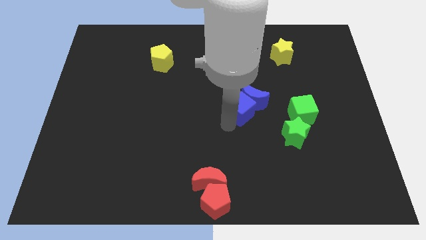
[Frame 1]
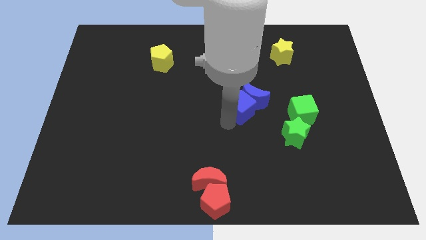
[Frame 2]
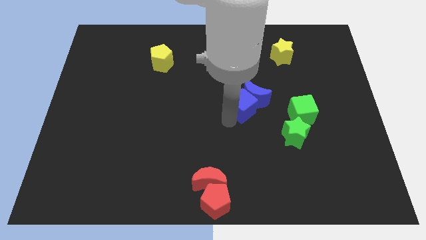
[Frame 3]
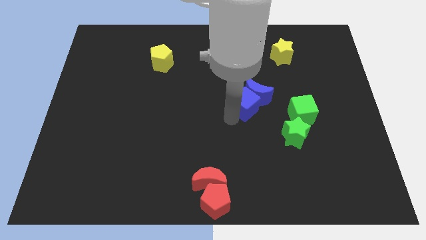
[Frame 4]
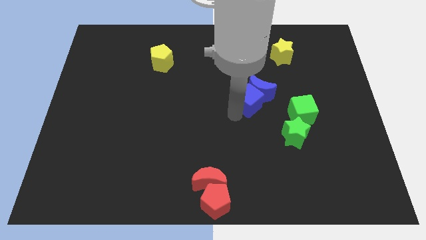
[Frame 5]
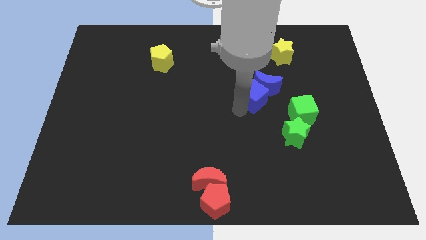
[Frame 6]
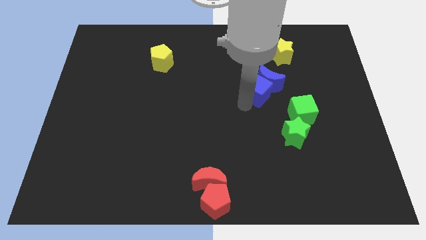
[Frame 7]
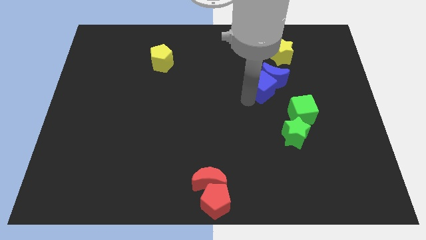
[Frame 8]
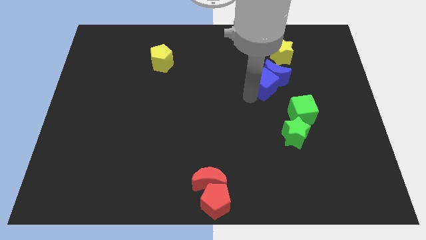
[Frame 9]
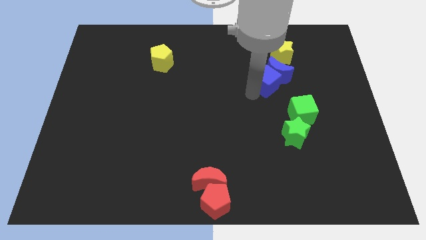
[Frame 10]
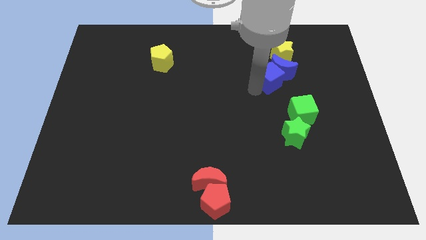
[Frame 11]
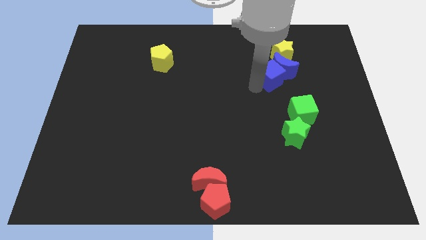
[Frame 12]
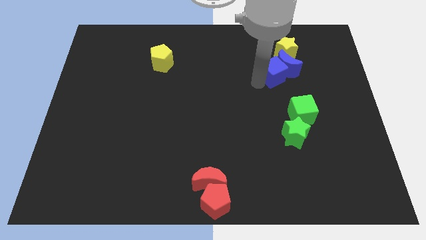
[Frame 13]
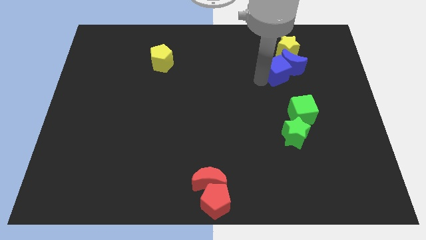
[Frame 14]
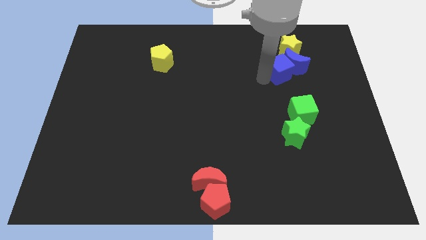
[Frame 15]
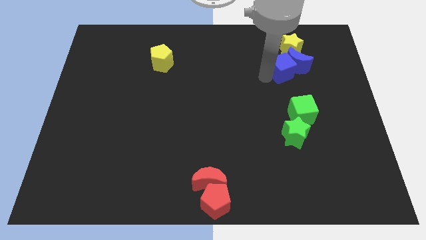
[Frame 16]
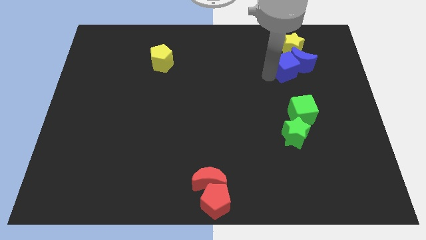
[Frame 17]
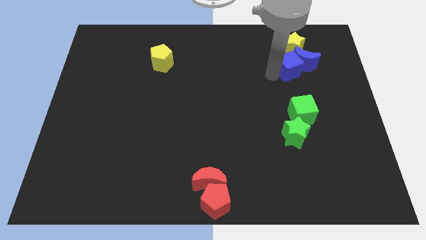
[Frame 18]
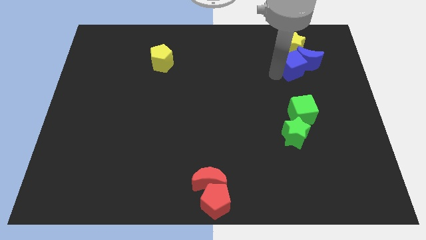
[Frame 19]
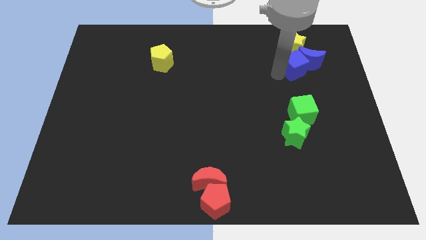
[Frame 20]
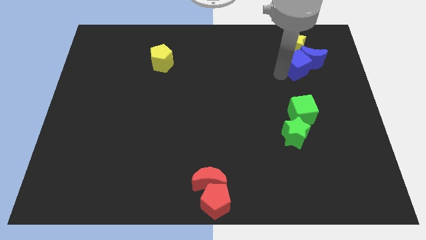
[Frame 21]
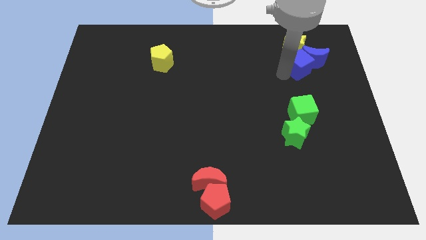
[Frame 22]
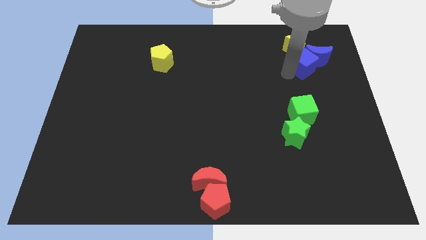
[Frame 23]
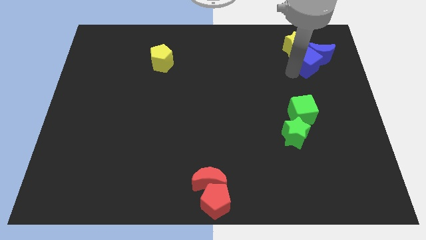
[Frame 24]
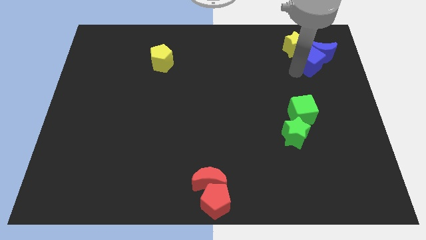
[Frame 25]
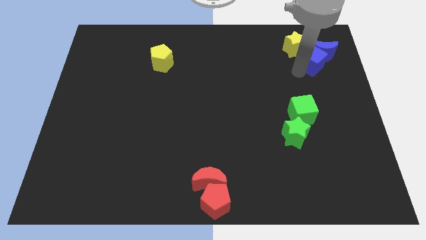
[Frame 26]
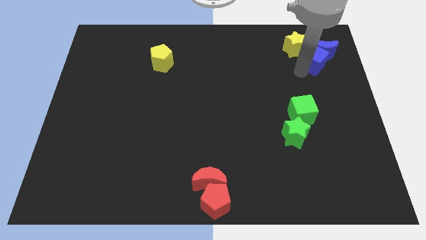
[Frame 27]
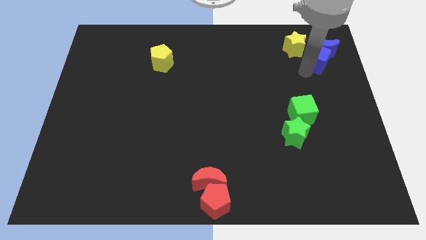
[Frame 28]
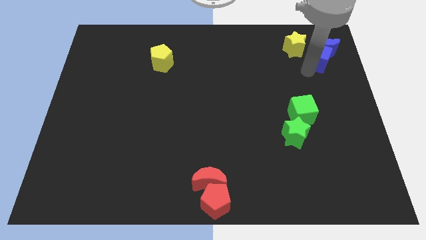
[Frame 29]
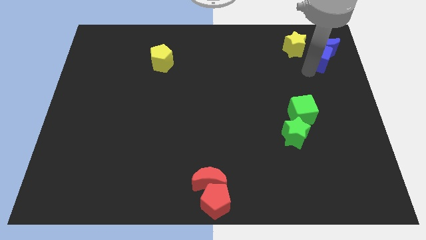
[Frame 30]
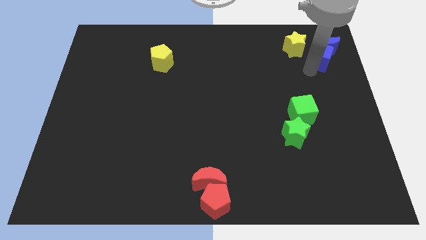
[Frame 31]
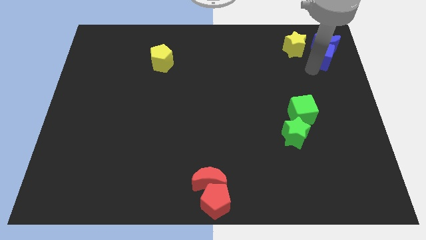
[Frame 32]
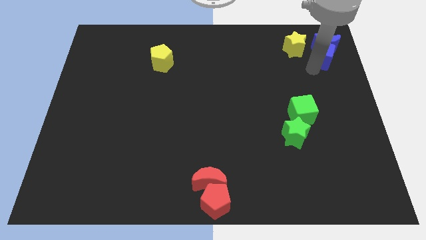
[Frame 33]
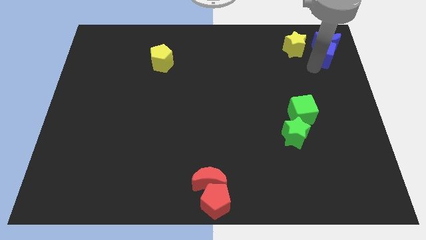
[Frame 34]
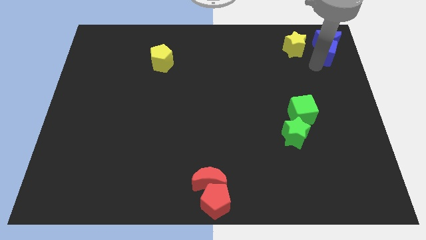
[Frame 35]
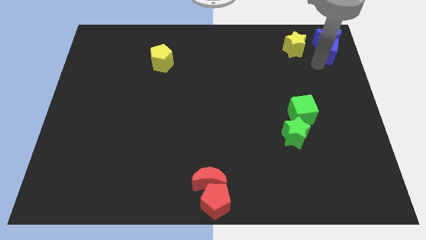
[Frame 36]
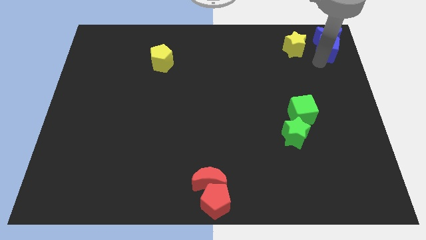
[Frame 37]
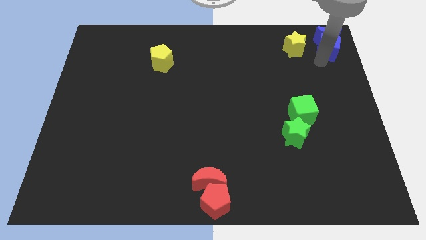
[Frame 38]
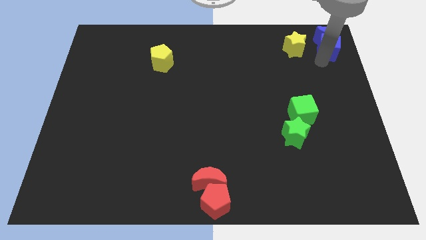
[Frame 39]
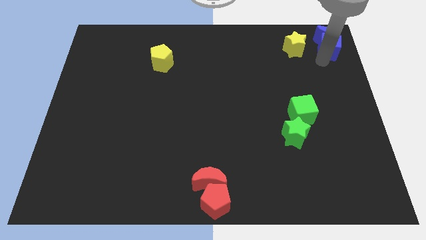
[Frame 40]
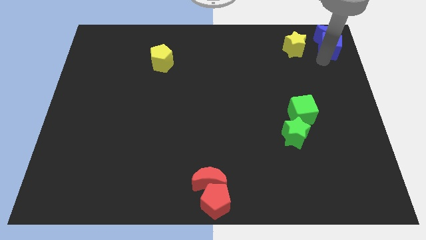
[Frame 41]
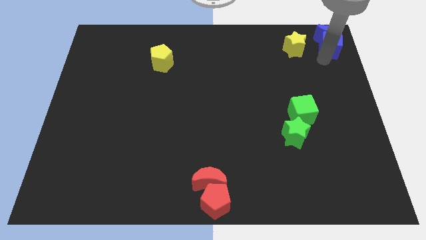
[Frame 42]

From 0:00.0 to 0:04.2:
move the blue blocks to the top right corner of the board

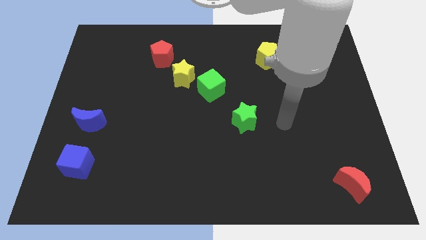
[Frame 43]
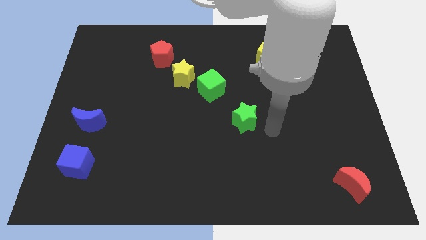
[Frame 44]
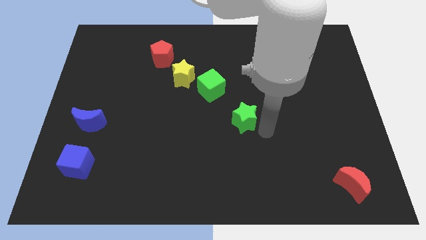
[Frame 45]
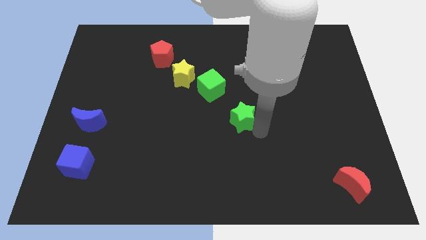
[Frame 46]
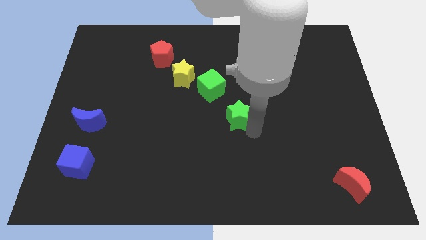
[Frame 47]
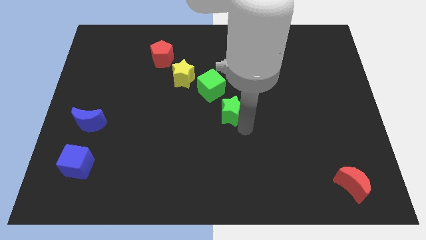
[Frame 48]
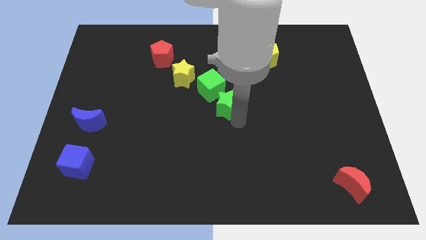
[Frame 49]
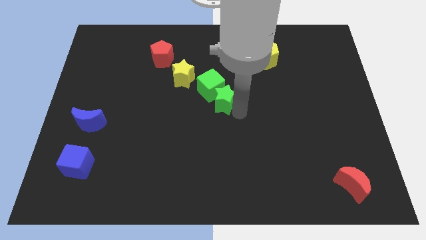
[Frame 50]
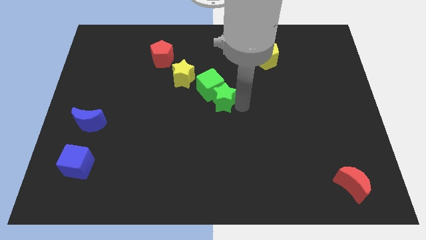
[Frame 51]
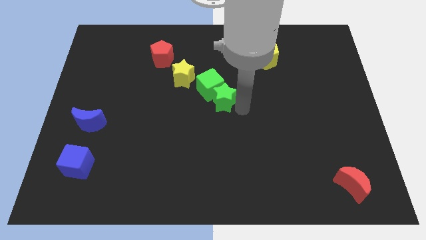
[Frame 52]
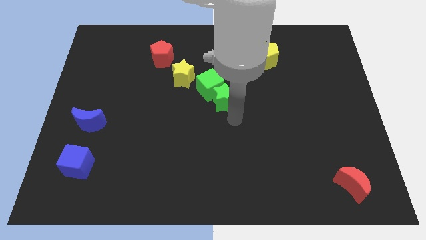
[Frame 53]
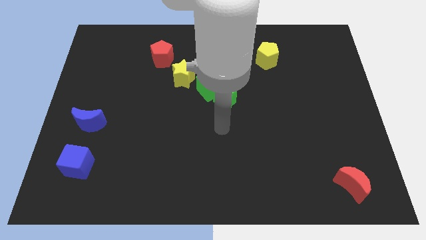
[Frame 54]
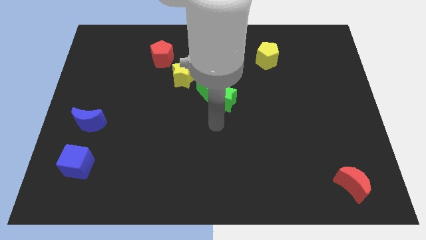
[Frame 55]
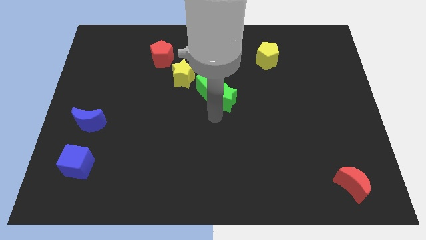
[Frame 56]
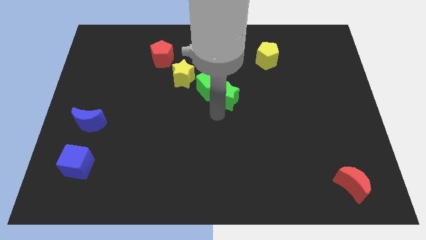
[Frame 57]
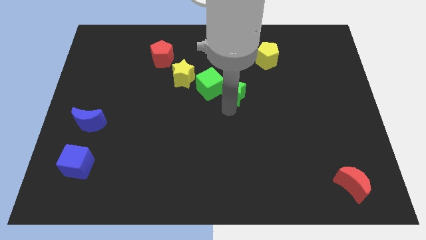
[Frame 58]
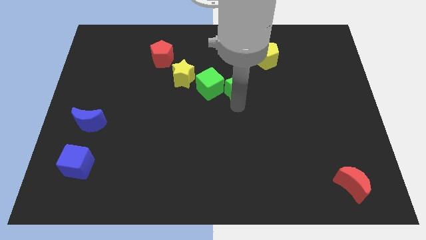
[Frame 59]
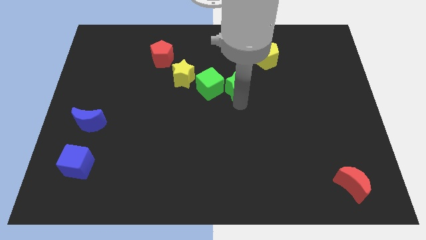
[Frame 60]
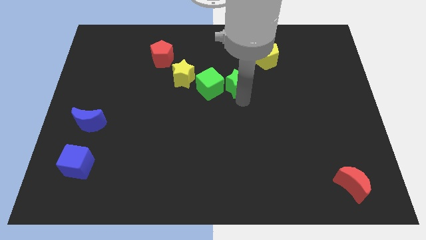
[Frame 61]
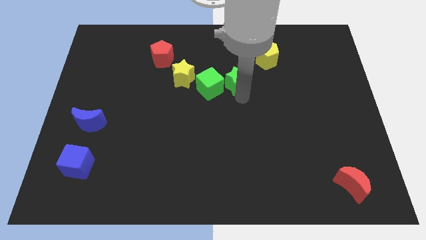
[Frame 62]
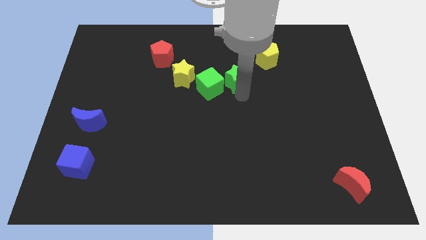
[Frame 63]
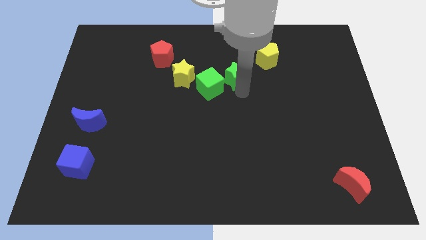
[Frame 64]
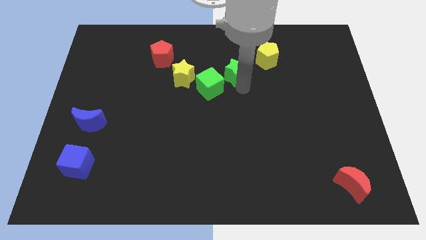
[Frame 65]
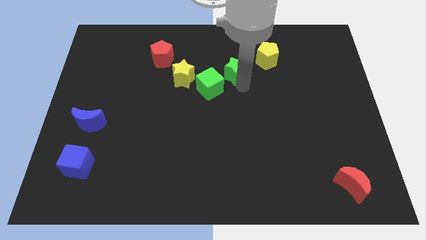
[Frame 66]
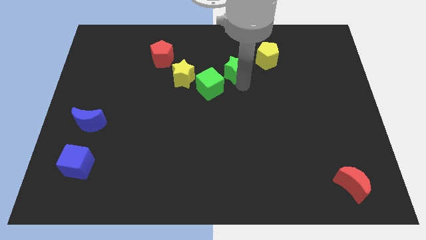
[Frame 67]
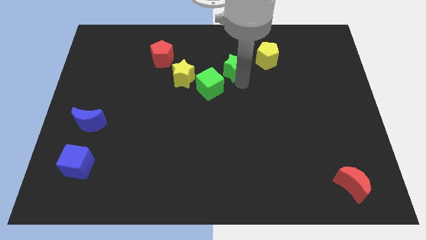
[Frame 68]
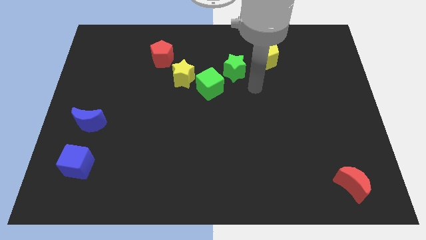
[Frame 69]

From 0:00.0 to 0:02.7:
place the green star in between the yellow pentagon and the green cube

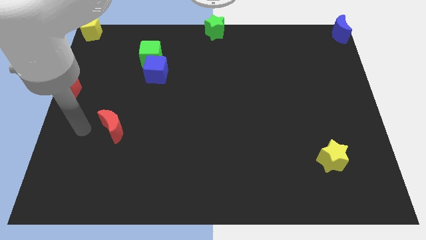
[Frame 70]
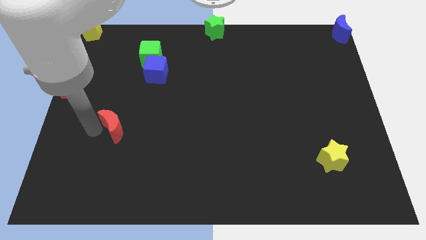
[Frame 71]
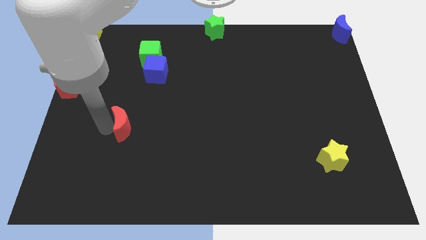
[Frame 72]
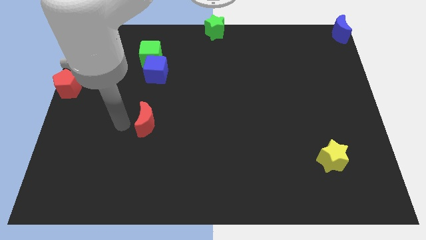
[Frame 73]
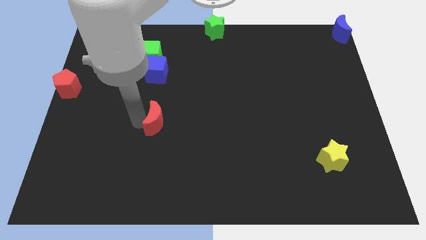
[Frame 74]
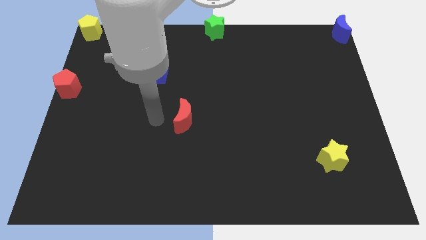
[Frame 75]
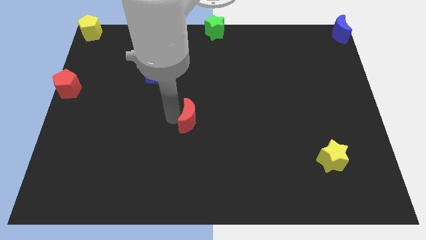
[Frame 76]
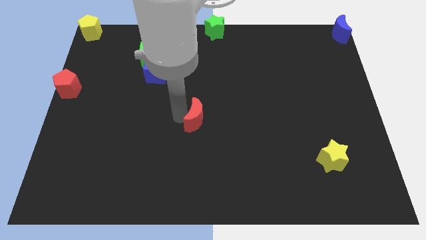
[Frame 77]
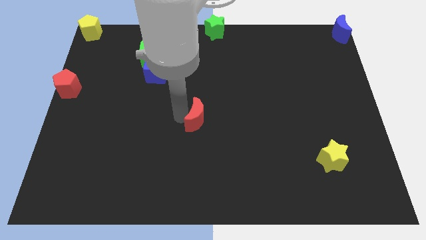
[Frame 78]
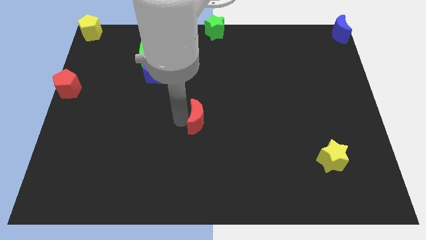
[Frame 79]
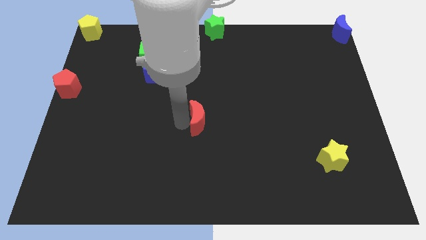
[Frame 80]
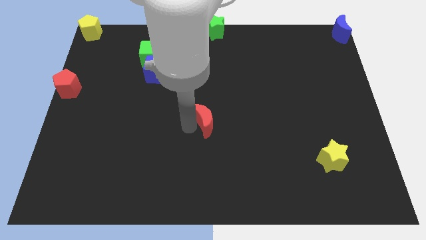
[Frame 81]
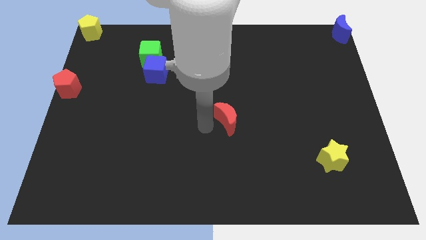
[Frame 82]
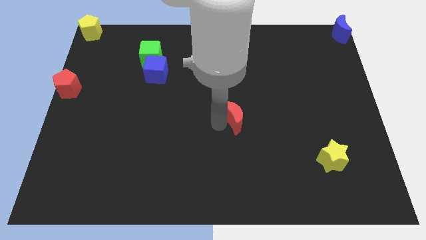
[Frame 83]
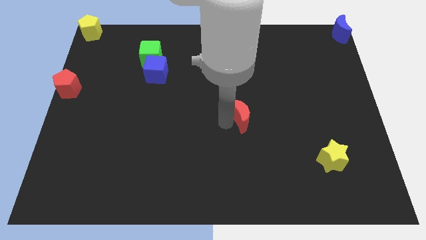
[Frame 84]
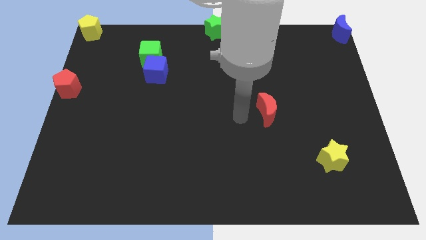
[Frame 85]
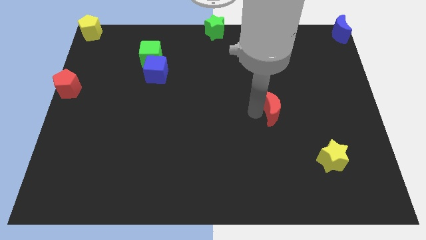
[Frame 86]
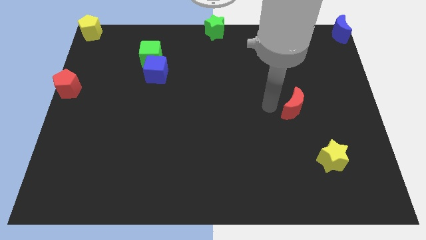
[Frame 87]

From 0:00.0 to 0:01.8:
move the red moon diagonally top left to the yellow star

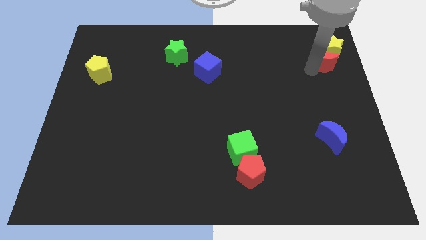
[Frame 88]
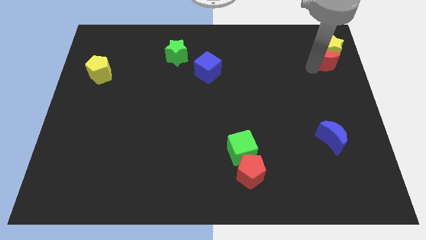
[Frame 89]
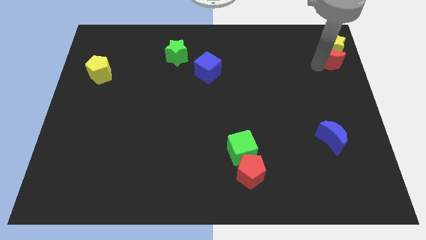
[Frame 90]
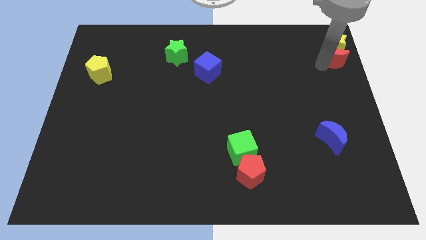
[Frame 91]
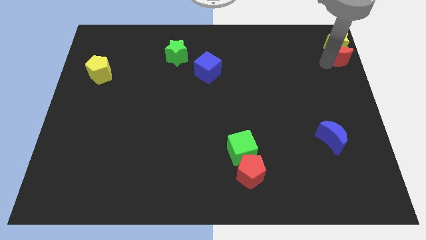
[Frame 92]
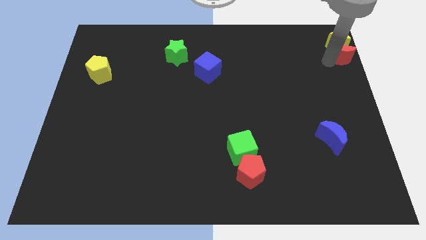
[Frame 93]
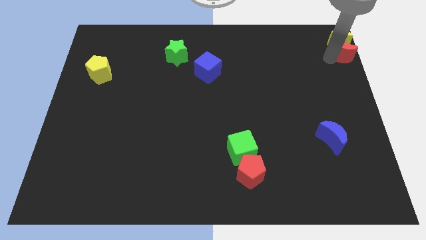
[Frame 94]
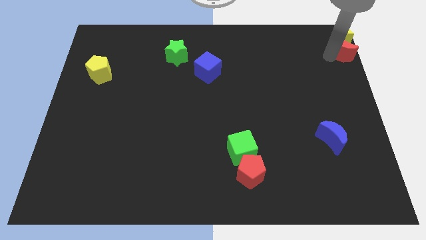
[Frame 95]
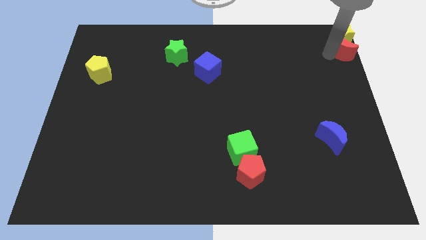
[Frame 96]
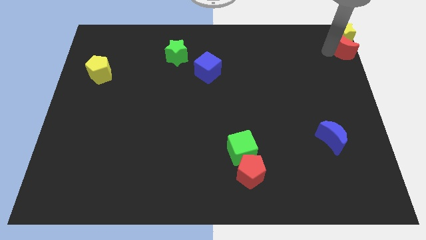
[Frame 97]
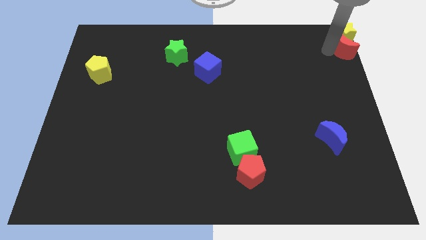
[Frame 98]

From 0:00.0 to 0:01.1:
slide red moon along with yellow star to the top right
